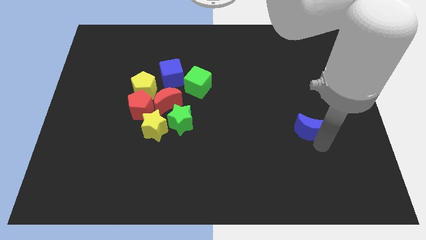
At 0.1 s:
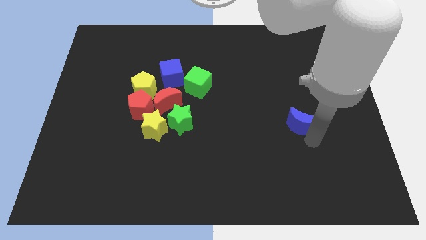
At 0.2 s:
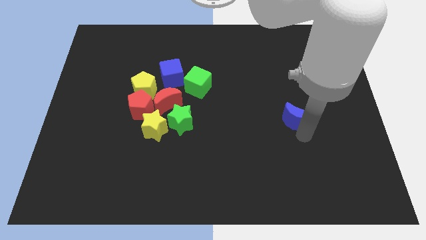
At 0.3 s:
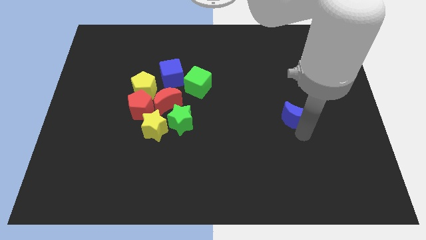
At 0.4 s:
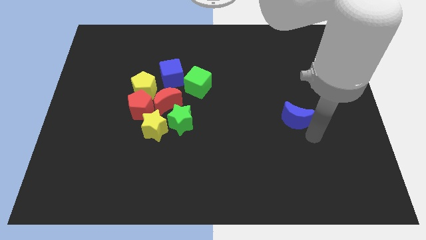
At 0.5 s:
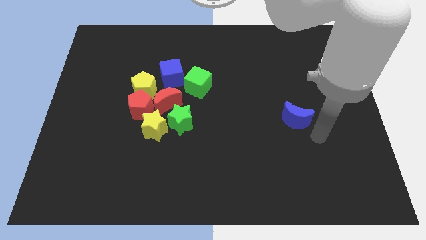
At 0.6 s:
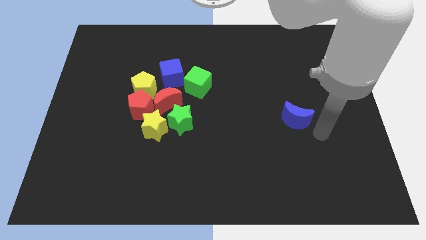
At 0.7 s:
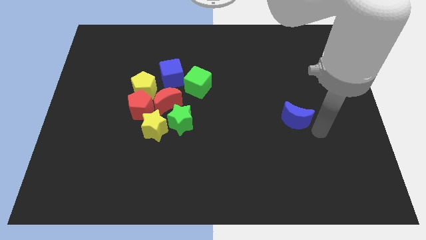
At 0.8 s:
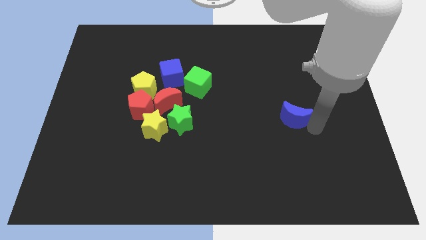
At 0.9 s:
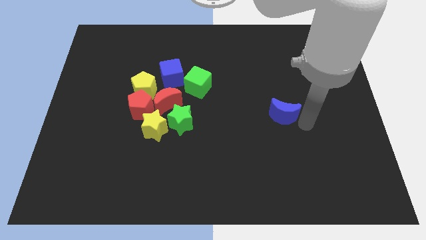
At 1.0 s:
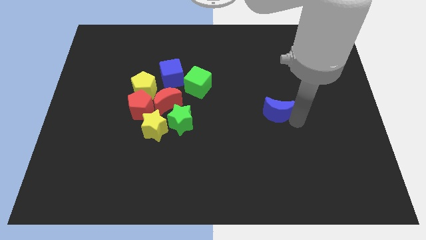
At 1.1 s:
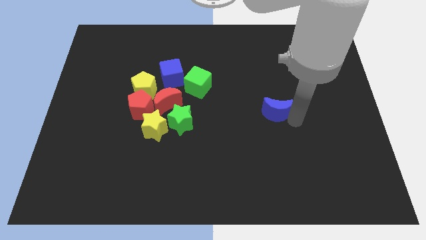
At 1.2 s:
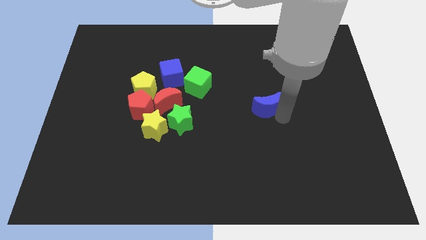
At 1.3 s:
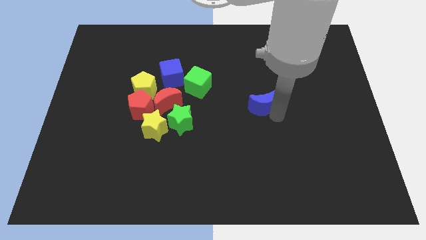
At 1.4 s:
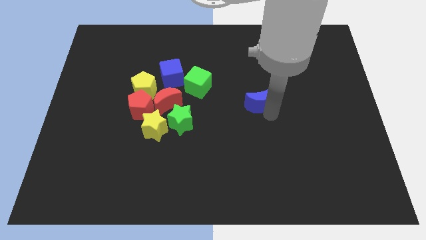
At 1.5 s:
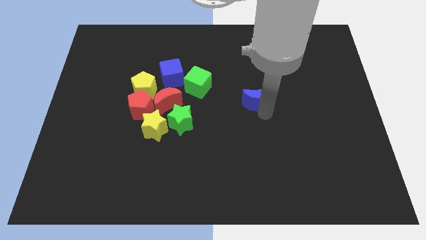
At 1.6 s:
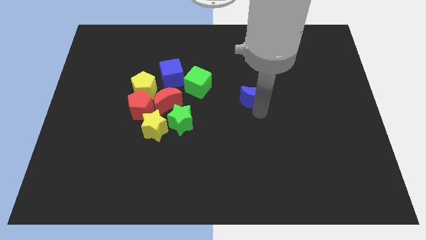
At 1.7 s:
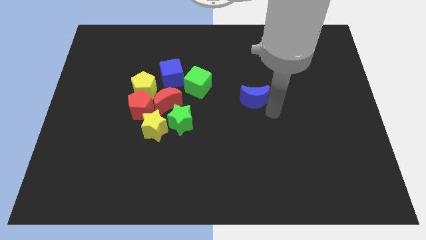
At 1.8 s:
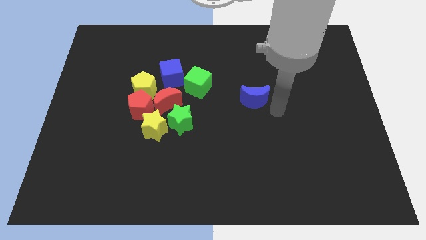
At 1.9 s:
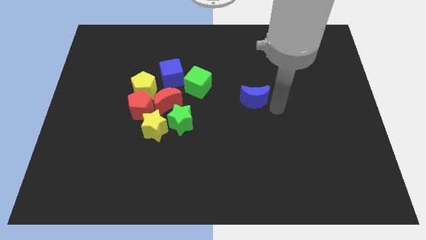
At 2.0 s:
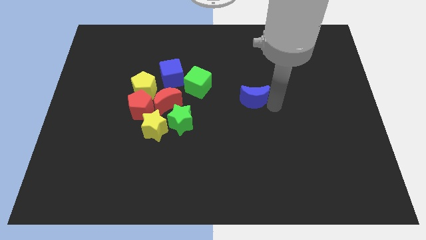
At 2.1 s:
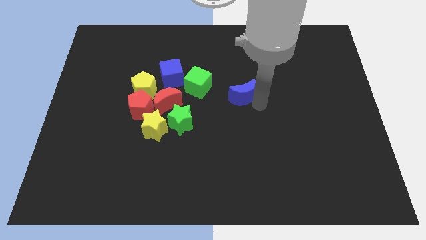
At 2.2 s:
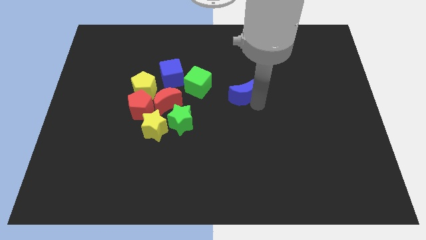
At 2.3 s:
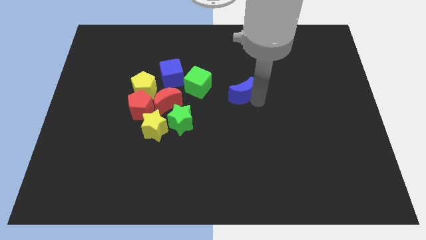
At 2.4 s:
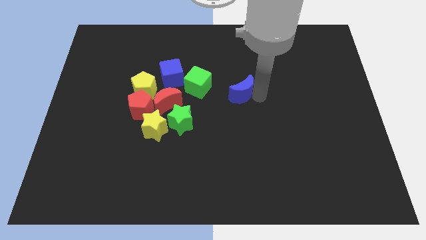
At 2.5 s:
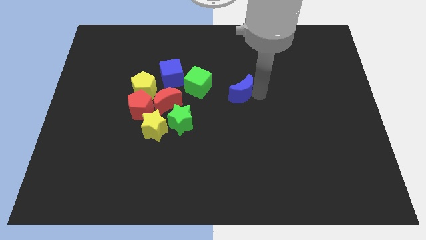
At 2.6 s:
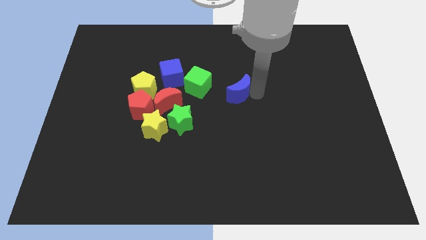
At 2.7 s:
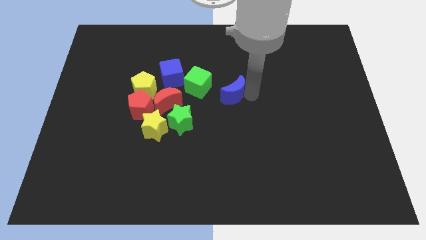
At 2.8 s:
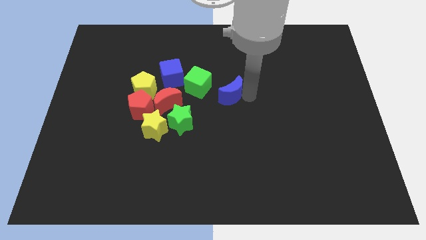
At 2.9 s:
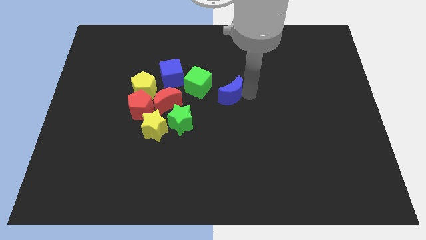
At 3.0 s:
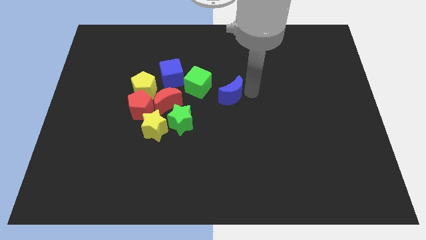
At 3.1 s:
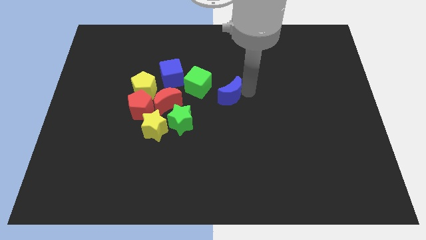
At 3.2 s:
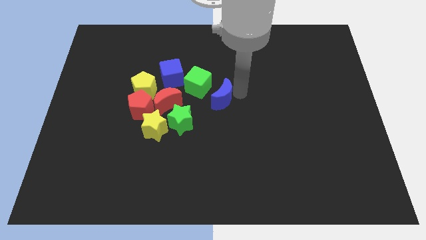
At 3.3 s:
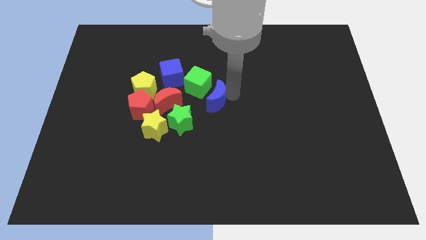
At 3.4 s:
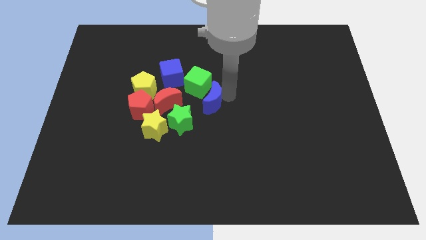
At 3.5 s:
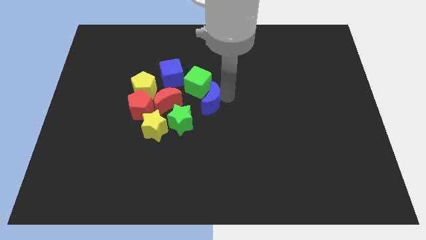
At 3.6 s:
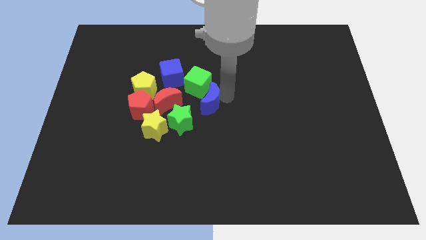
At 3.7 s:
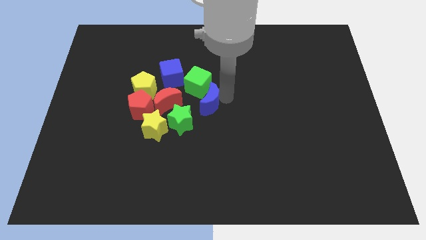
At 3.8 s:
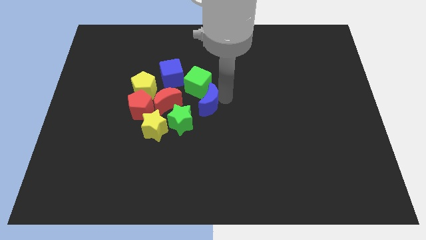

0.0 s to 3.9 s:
move the blue crescent towards green cube

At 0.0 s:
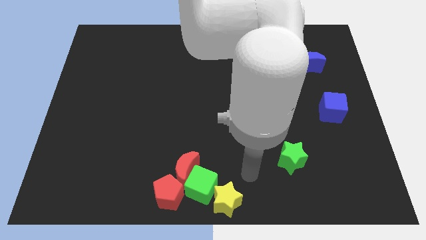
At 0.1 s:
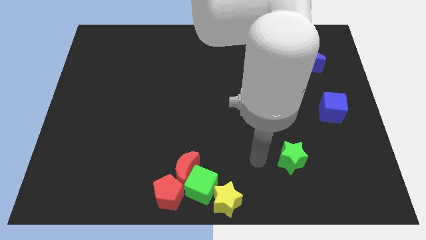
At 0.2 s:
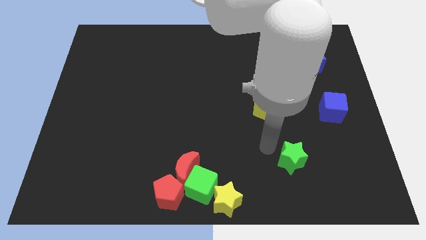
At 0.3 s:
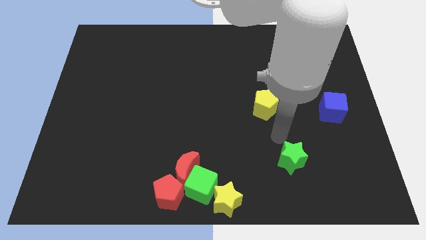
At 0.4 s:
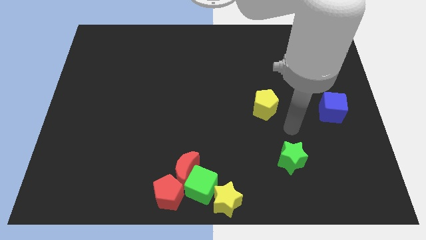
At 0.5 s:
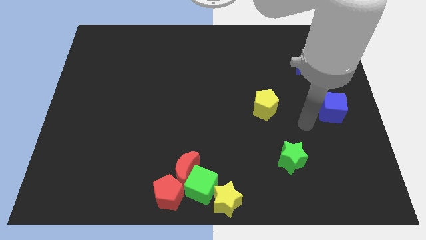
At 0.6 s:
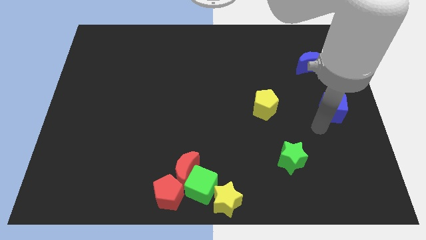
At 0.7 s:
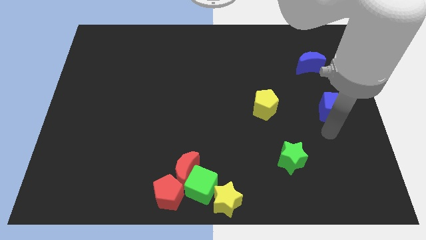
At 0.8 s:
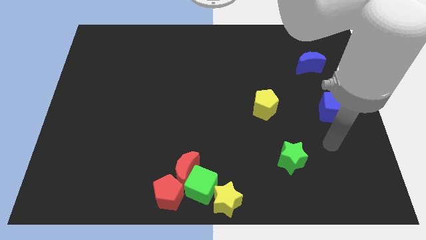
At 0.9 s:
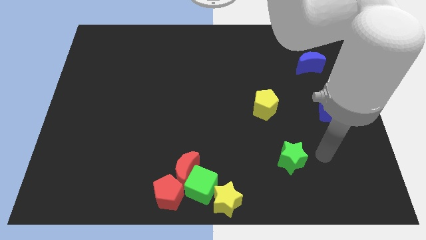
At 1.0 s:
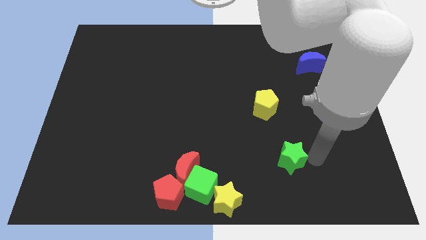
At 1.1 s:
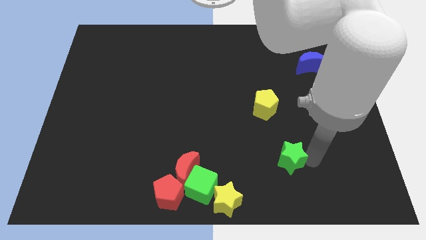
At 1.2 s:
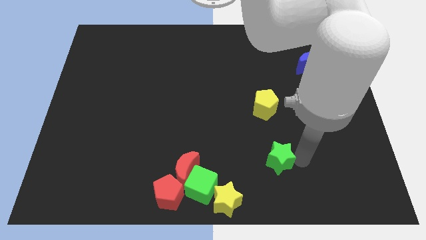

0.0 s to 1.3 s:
push the green star slightly to the left side

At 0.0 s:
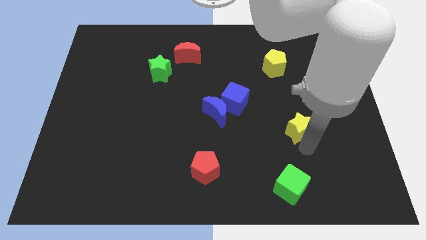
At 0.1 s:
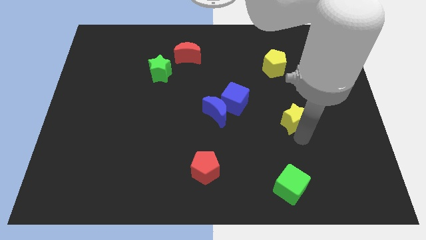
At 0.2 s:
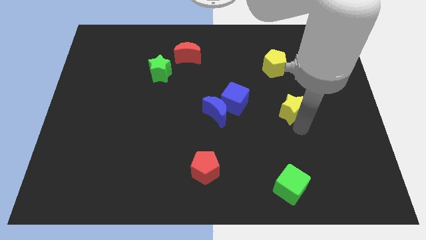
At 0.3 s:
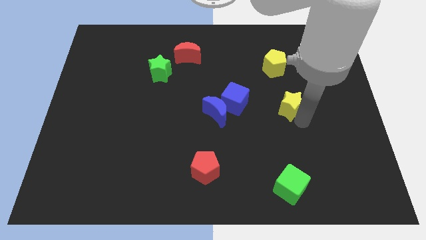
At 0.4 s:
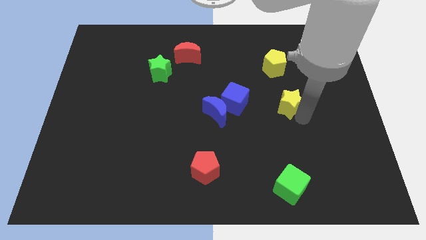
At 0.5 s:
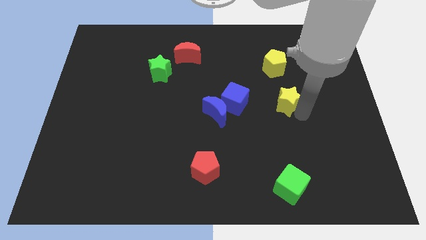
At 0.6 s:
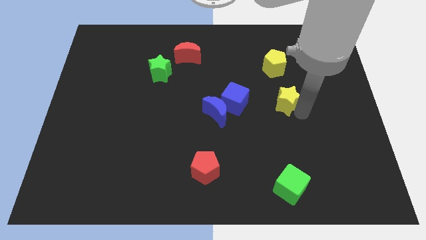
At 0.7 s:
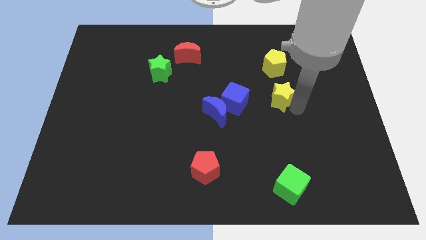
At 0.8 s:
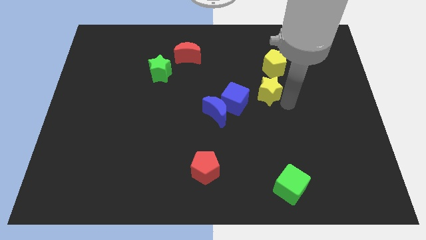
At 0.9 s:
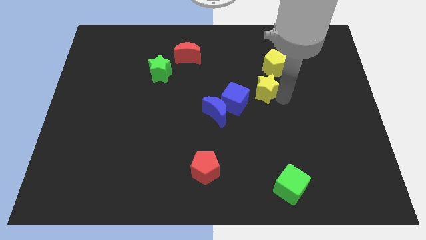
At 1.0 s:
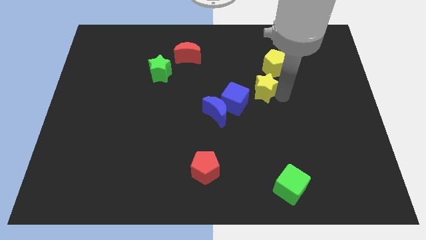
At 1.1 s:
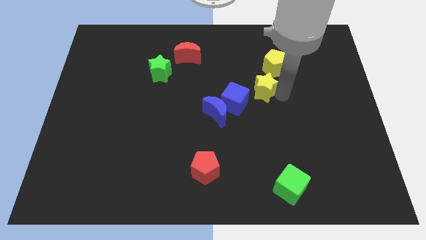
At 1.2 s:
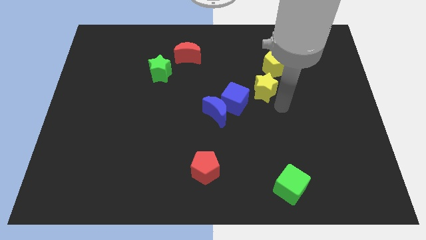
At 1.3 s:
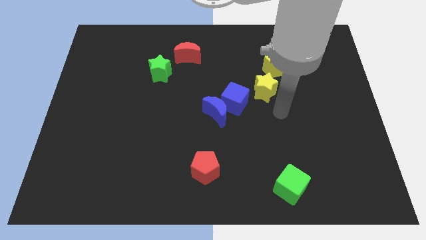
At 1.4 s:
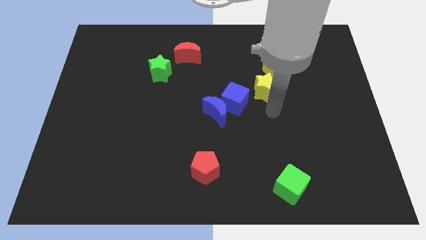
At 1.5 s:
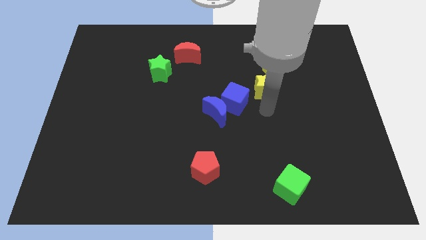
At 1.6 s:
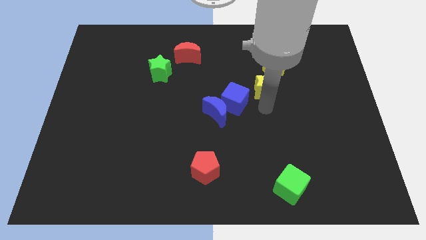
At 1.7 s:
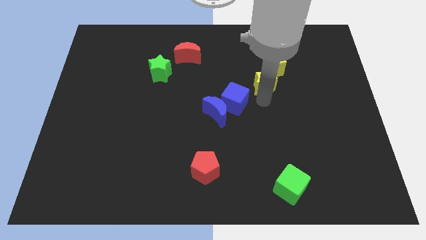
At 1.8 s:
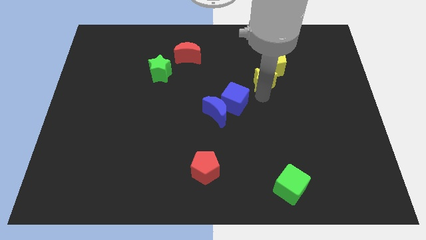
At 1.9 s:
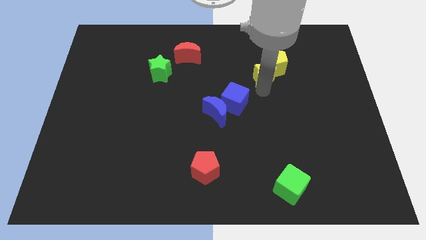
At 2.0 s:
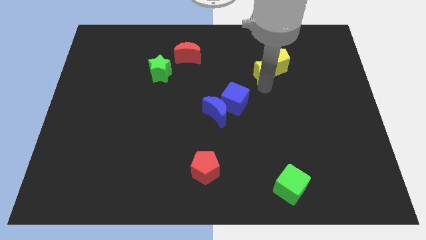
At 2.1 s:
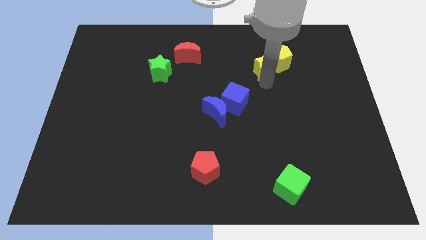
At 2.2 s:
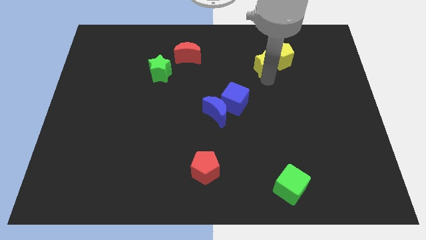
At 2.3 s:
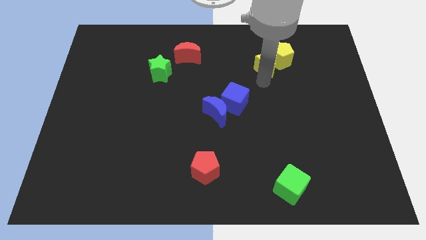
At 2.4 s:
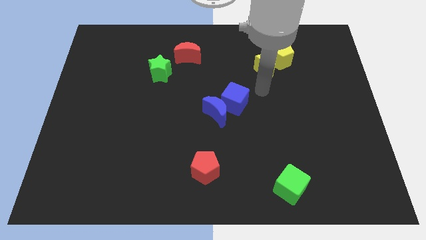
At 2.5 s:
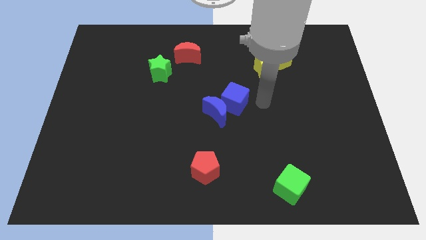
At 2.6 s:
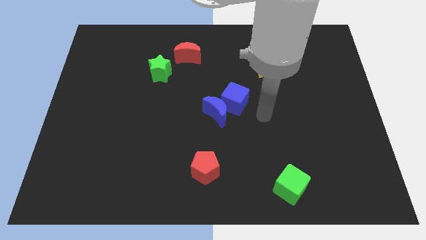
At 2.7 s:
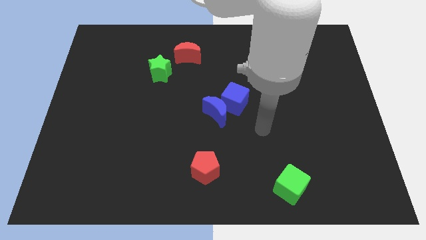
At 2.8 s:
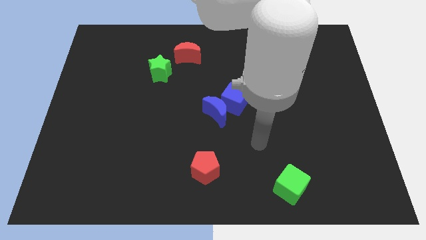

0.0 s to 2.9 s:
place yellow star towards yellow pentagon

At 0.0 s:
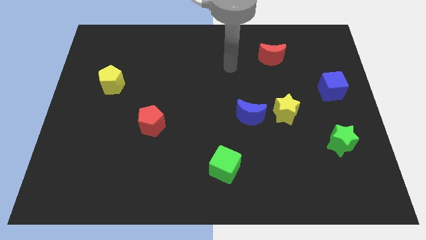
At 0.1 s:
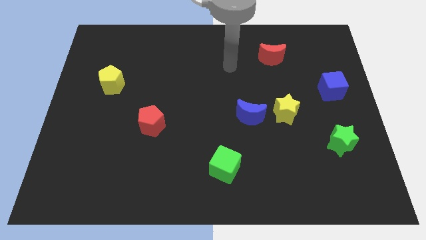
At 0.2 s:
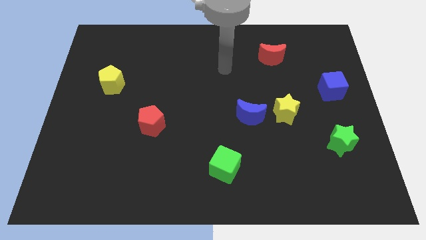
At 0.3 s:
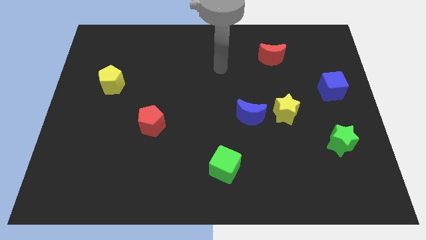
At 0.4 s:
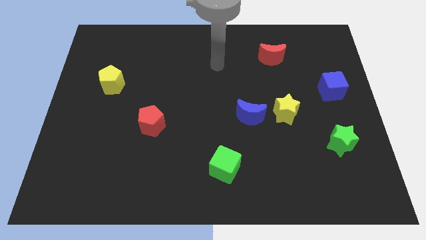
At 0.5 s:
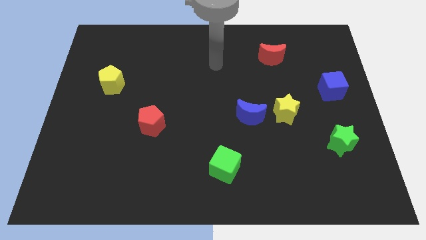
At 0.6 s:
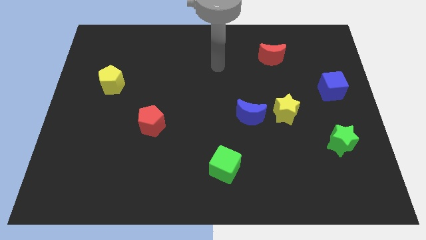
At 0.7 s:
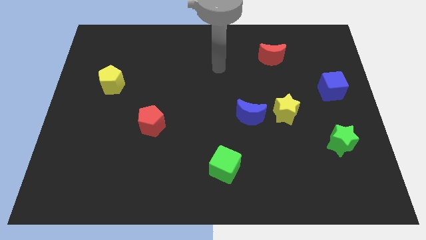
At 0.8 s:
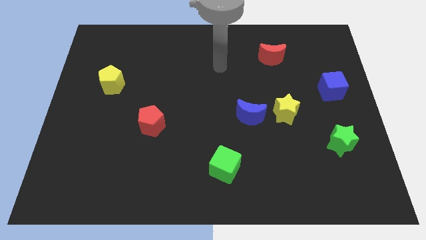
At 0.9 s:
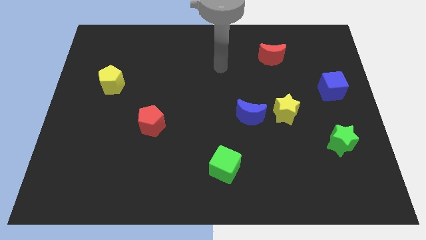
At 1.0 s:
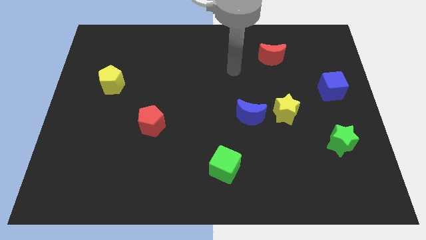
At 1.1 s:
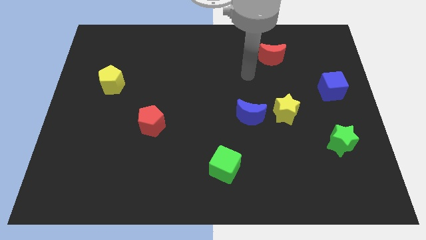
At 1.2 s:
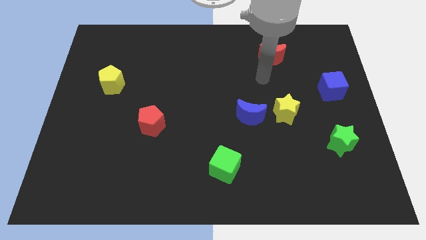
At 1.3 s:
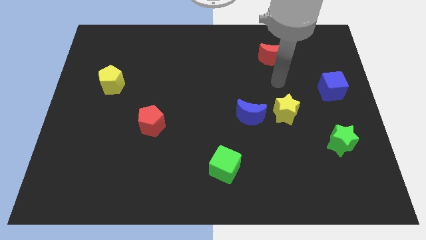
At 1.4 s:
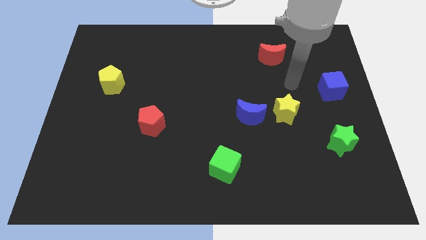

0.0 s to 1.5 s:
place your hand in between red crescent and yellow star
